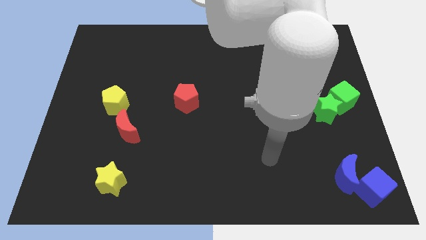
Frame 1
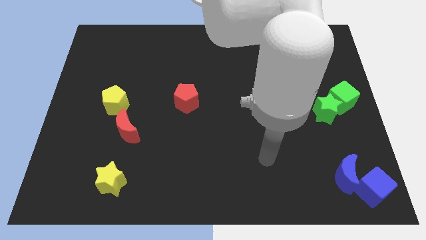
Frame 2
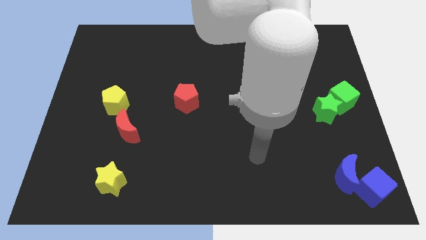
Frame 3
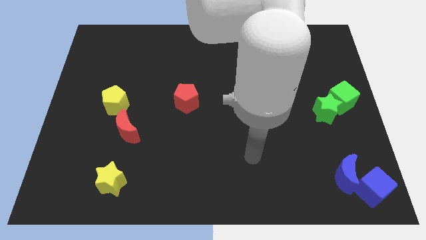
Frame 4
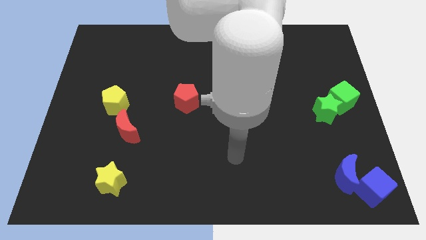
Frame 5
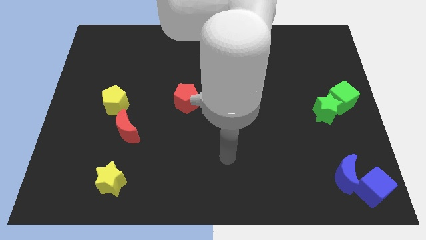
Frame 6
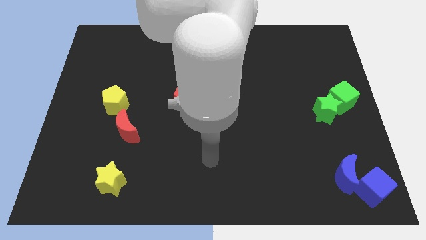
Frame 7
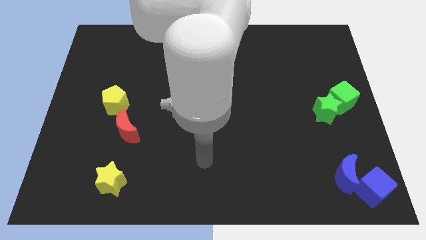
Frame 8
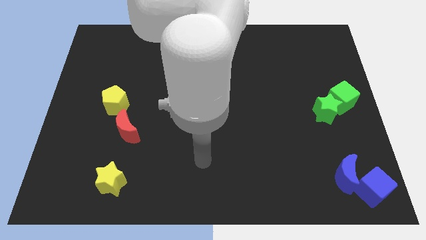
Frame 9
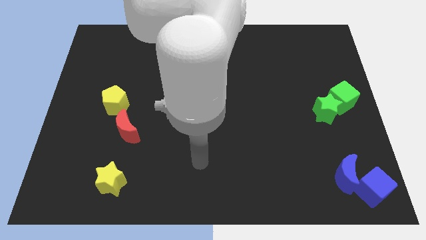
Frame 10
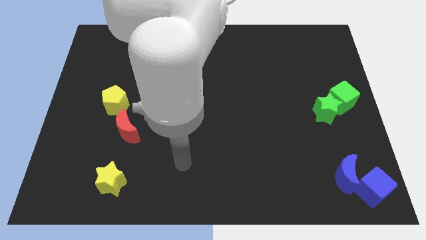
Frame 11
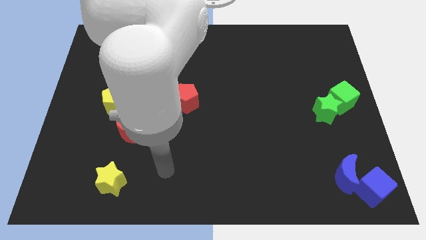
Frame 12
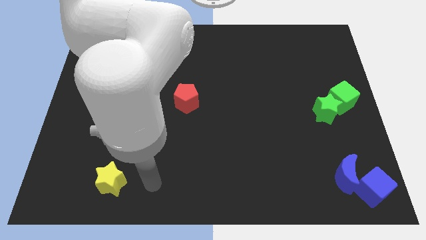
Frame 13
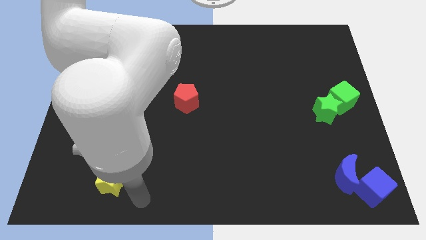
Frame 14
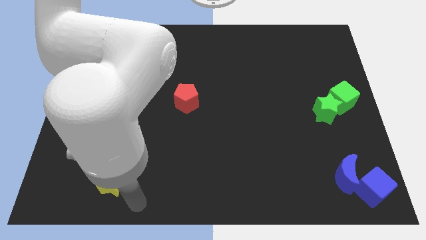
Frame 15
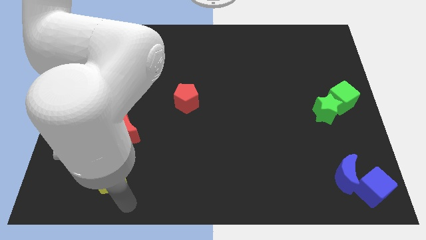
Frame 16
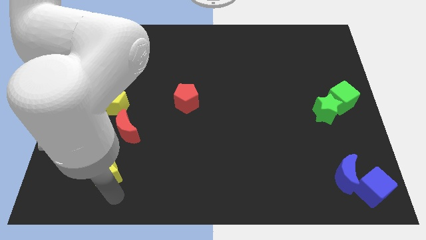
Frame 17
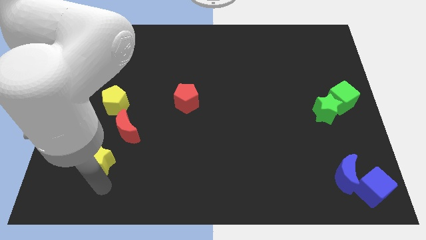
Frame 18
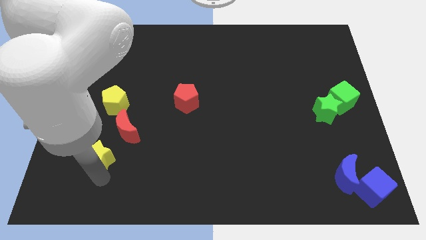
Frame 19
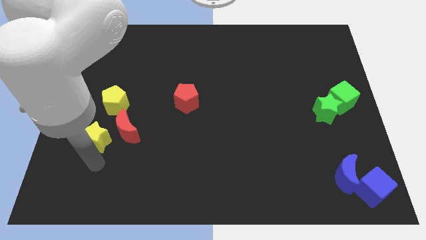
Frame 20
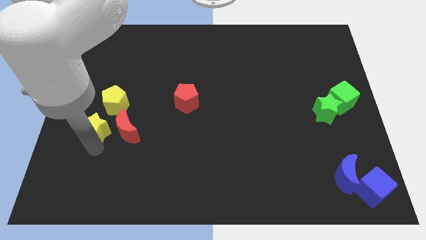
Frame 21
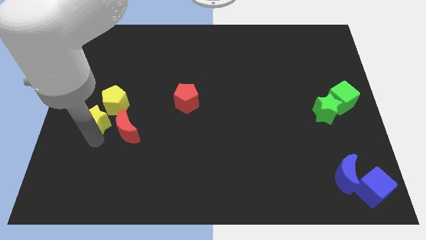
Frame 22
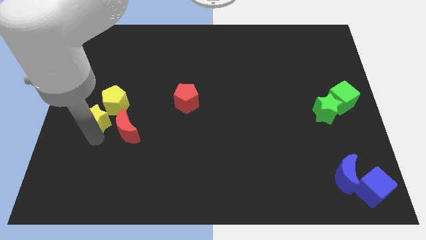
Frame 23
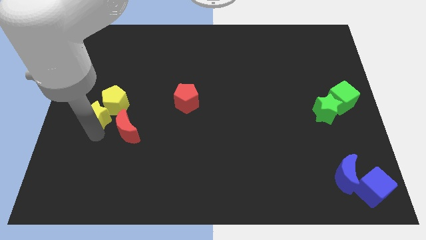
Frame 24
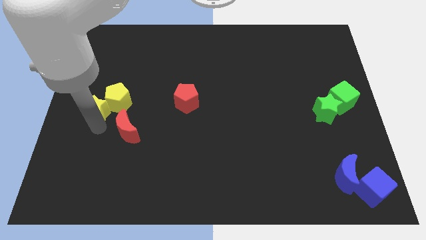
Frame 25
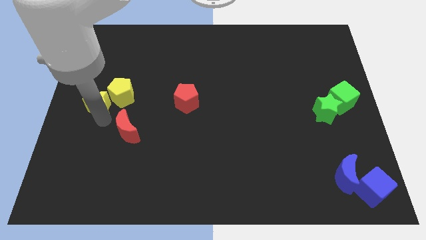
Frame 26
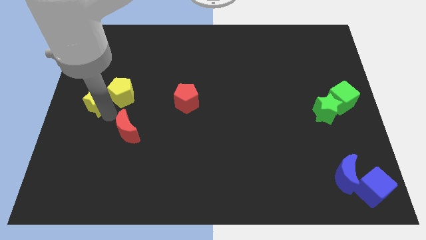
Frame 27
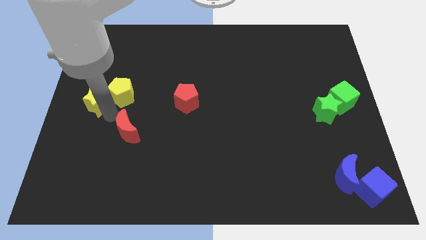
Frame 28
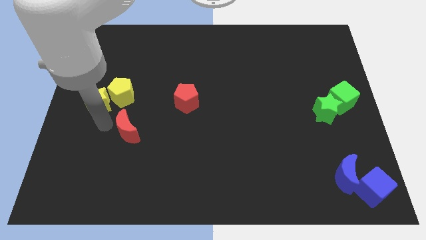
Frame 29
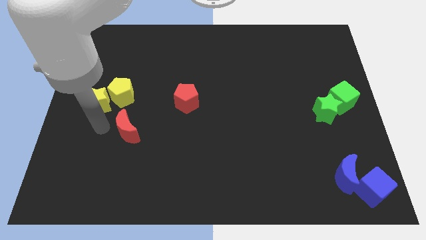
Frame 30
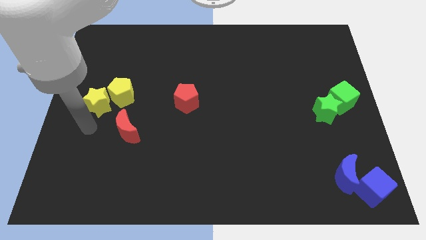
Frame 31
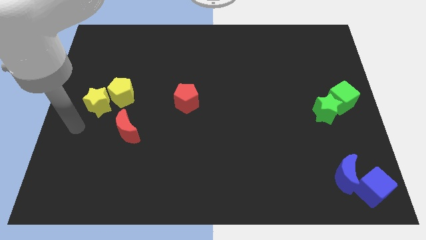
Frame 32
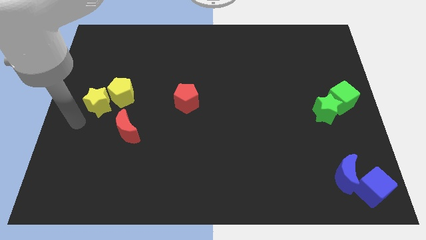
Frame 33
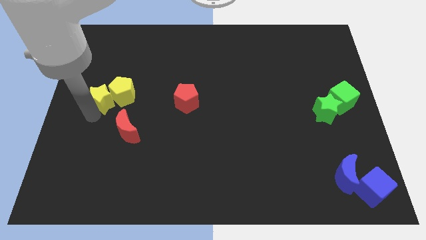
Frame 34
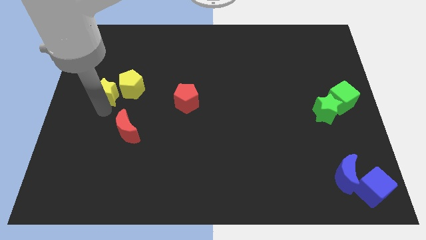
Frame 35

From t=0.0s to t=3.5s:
touch your arm to the bottom of the yellow star

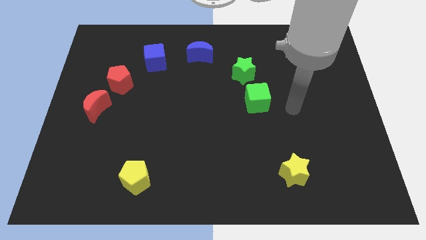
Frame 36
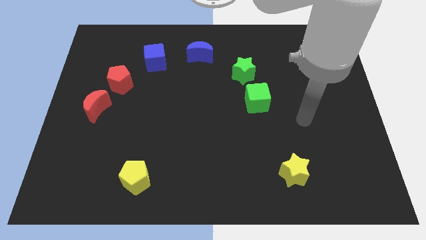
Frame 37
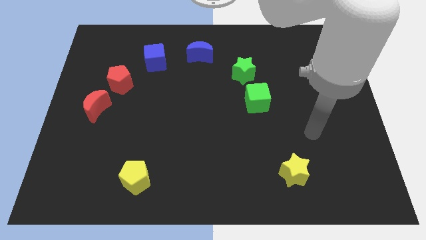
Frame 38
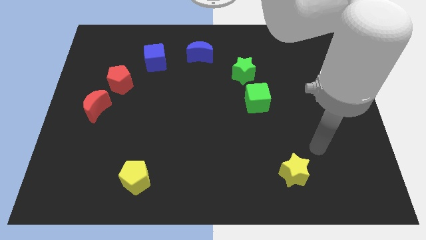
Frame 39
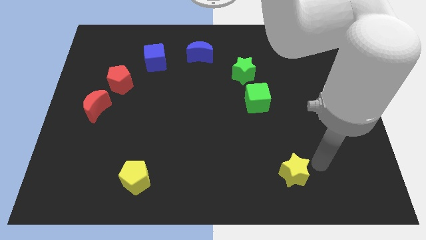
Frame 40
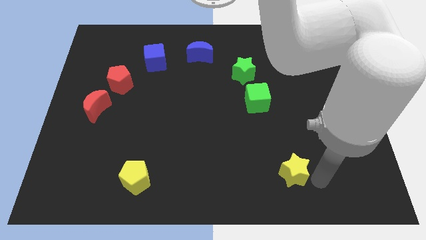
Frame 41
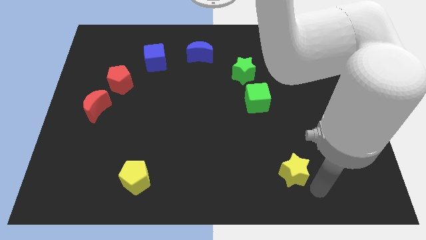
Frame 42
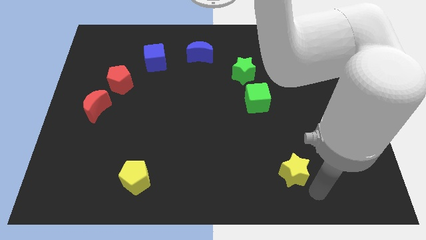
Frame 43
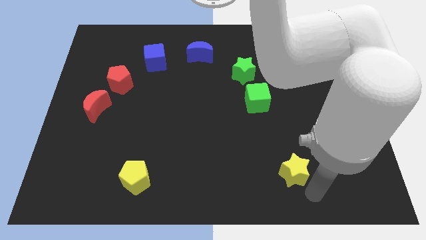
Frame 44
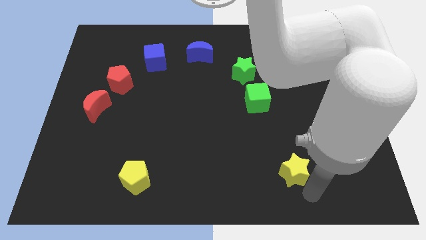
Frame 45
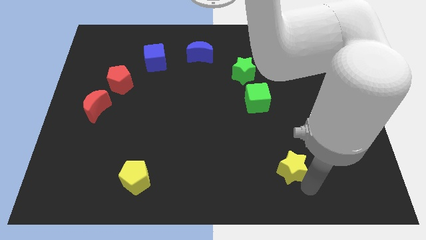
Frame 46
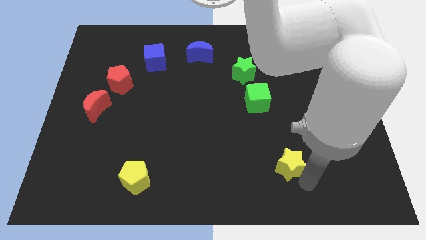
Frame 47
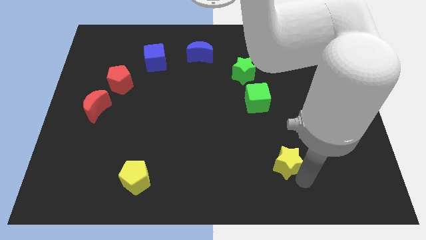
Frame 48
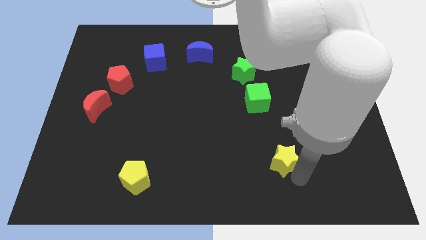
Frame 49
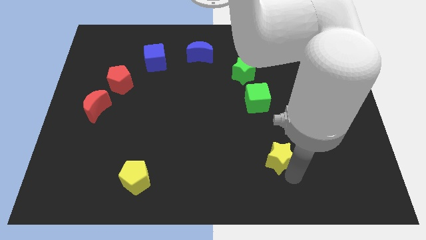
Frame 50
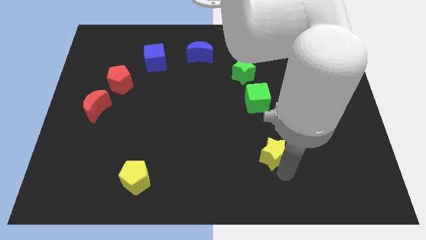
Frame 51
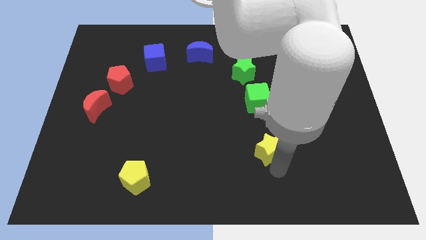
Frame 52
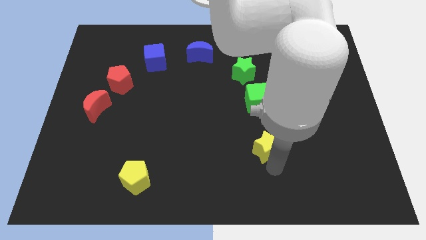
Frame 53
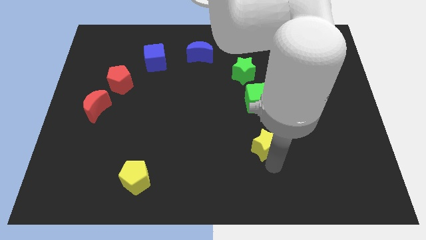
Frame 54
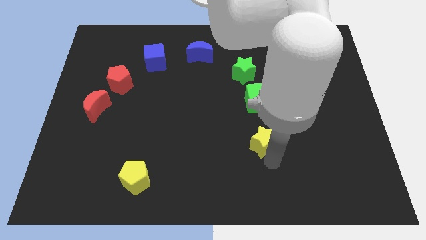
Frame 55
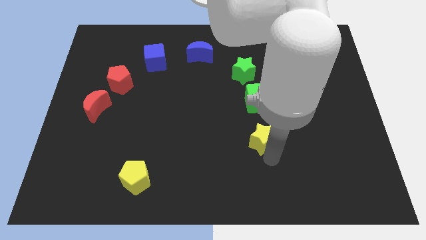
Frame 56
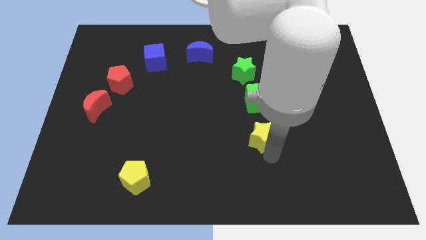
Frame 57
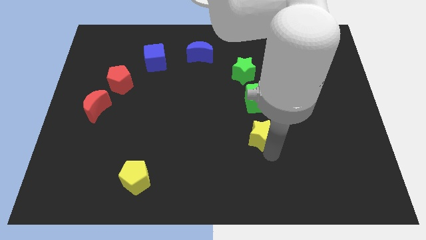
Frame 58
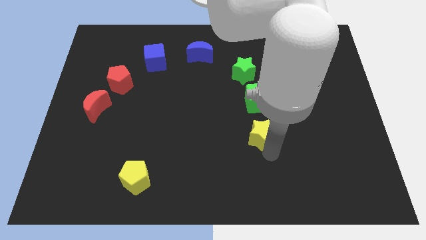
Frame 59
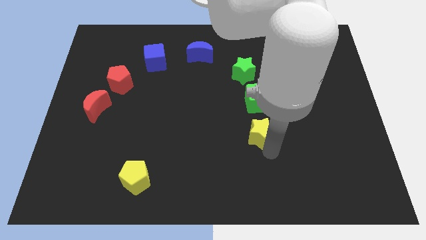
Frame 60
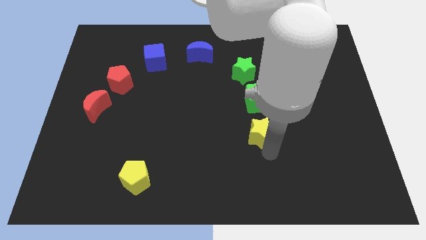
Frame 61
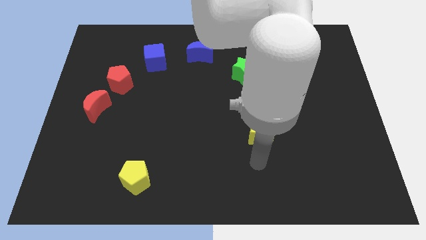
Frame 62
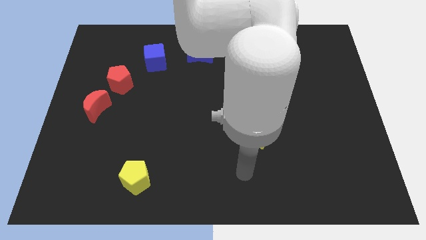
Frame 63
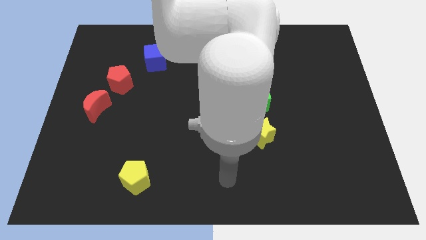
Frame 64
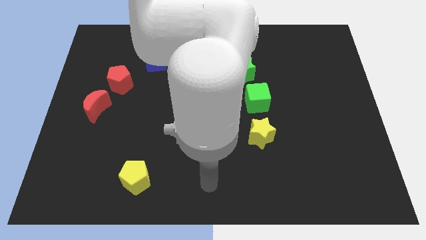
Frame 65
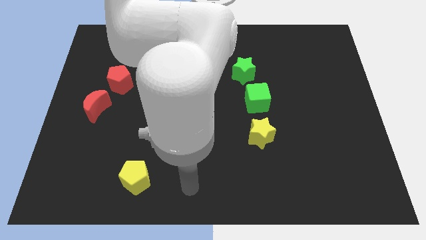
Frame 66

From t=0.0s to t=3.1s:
place yellow star down to the green block

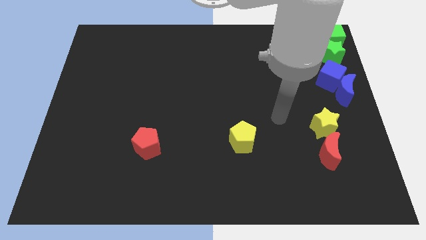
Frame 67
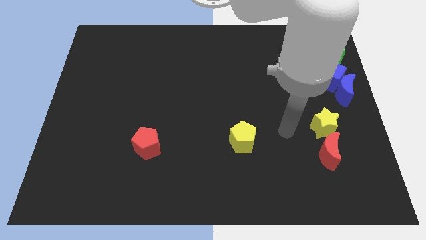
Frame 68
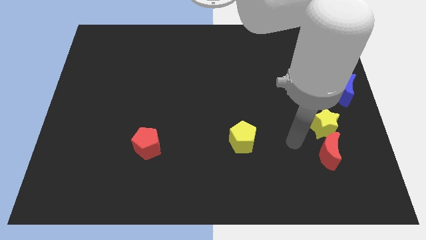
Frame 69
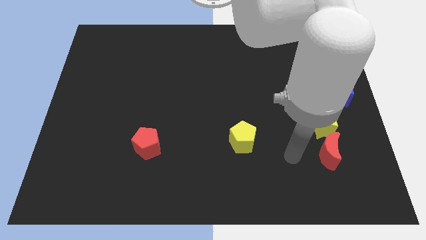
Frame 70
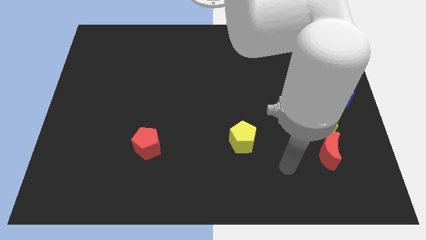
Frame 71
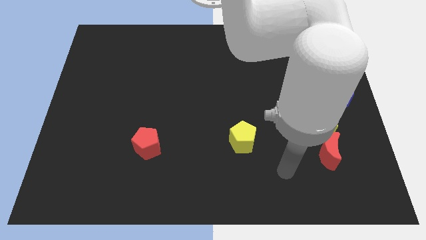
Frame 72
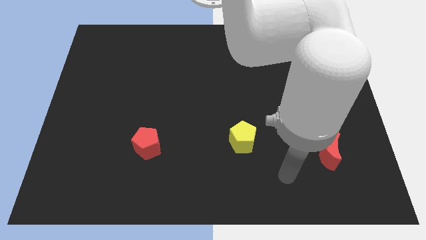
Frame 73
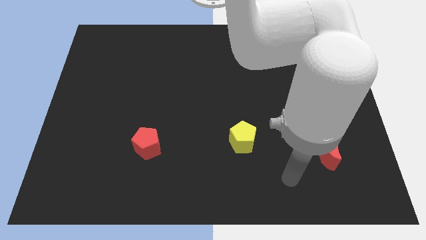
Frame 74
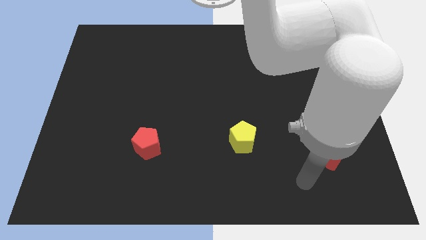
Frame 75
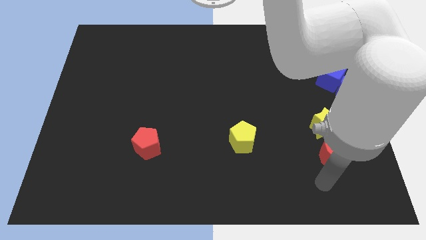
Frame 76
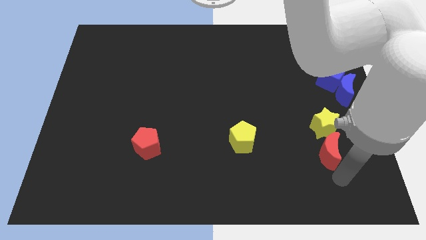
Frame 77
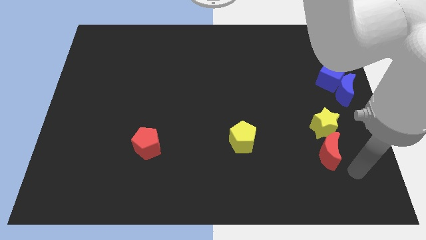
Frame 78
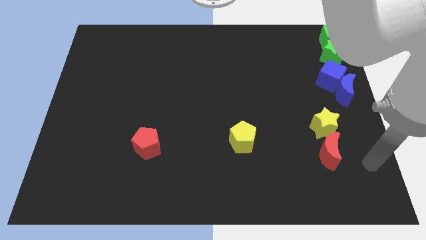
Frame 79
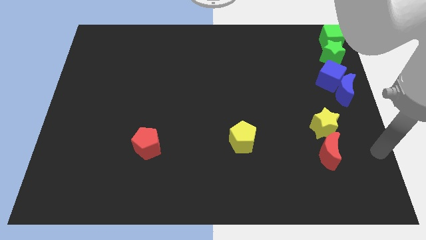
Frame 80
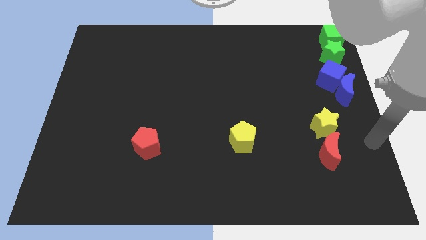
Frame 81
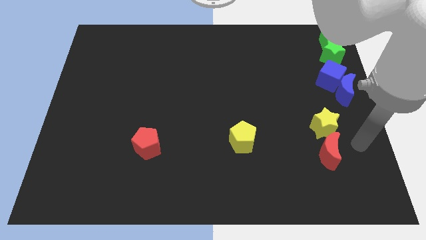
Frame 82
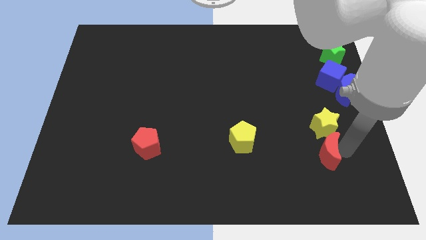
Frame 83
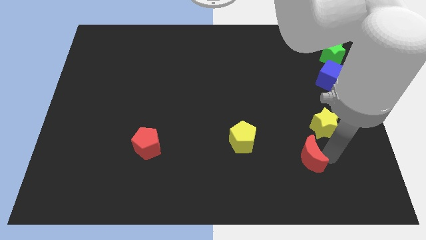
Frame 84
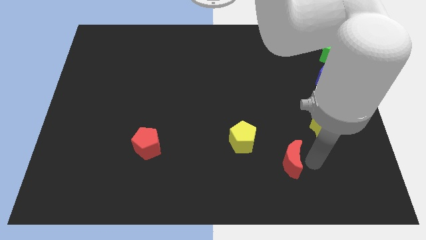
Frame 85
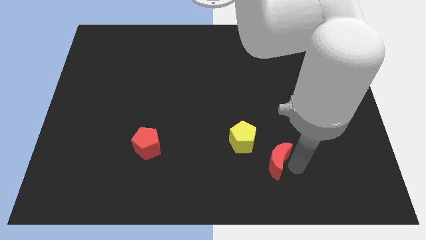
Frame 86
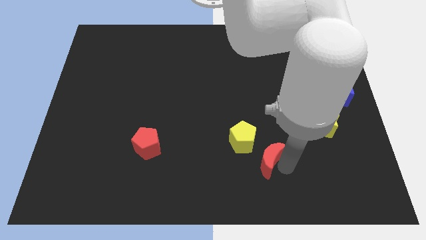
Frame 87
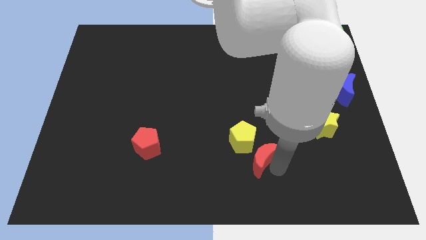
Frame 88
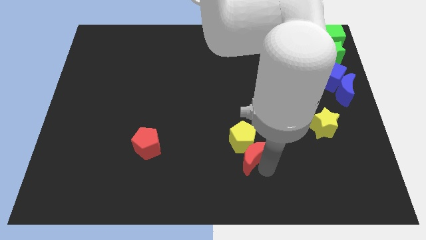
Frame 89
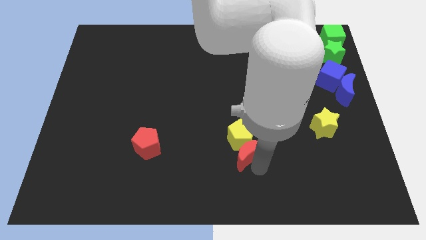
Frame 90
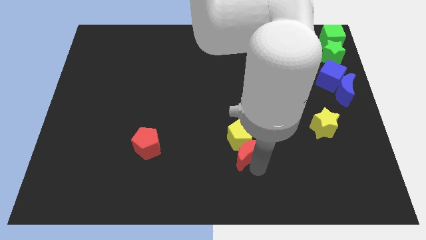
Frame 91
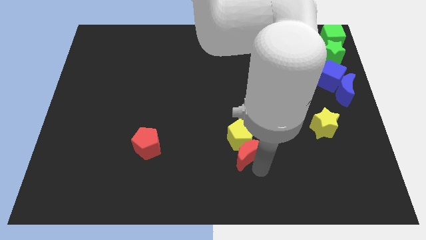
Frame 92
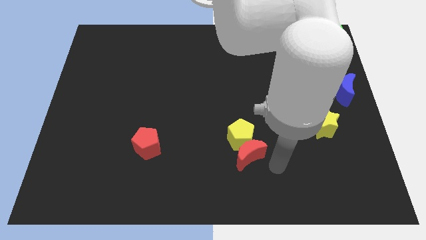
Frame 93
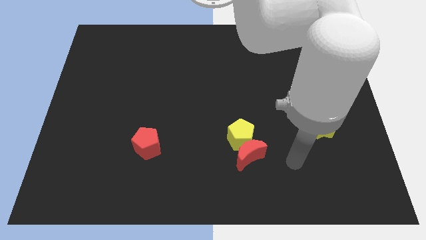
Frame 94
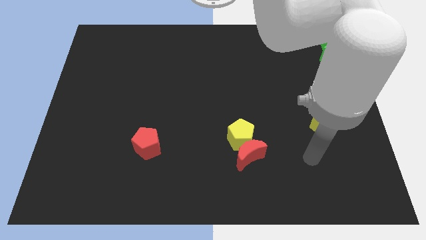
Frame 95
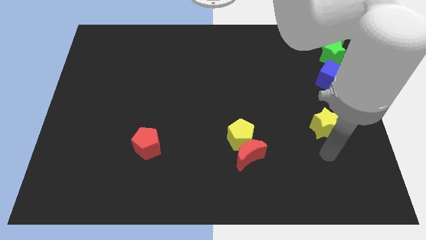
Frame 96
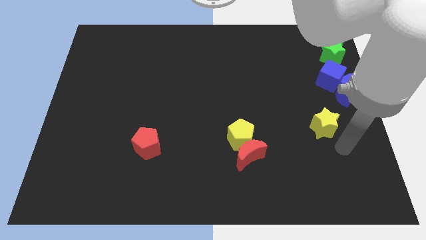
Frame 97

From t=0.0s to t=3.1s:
move the red crescent into the yellow pentagon
